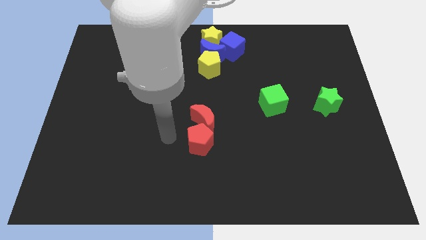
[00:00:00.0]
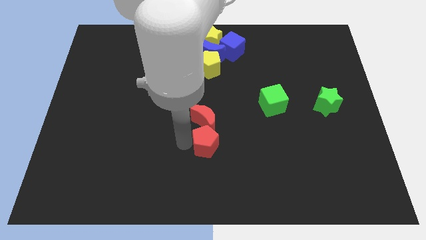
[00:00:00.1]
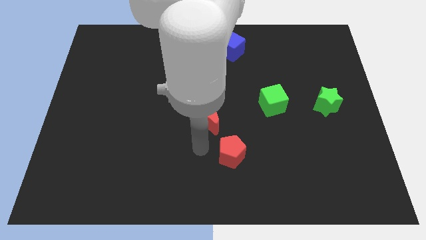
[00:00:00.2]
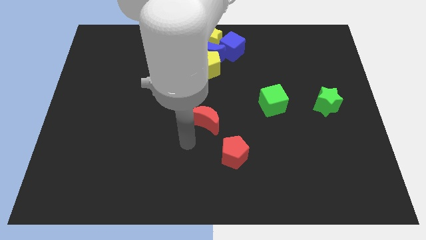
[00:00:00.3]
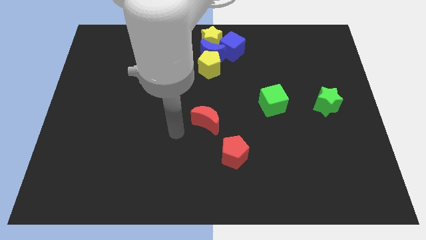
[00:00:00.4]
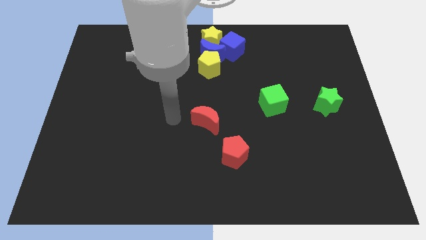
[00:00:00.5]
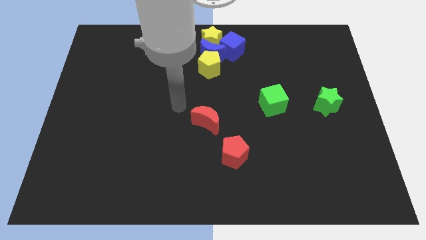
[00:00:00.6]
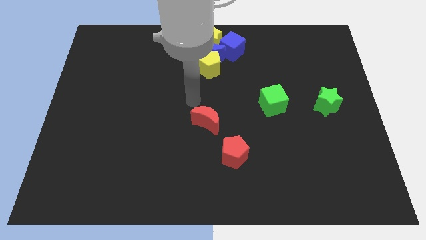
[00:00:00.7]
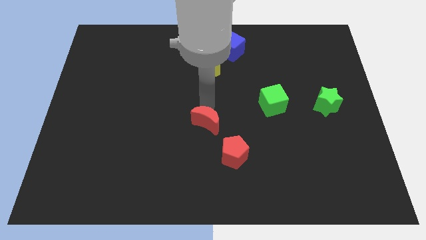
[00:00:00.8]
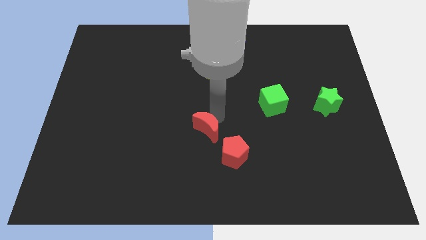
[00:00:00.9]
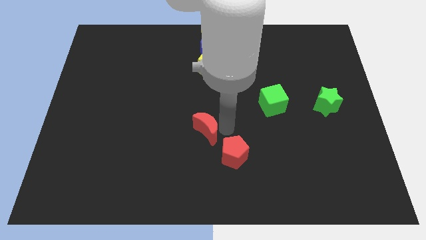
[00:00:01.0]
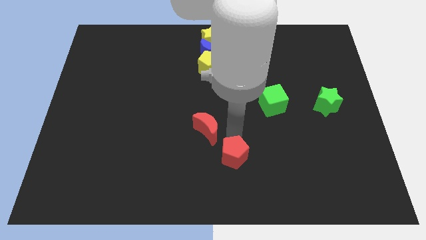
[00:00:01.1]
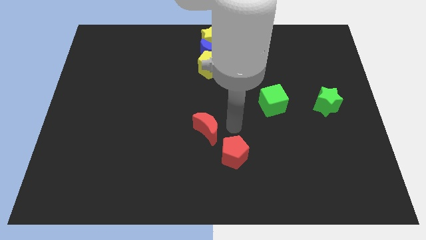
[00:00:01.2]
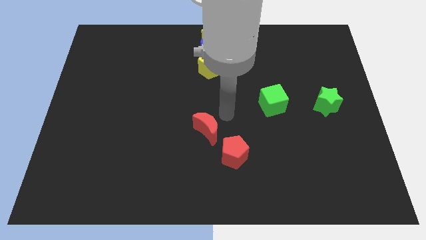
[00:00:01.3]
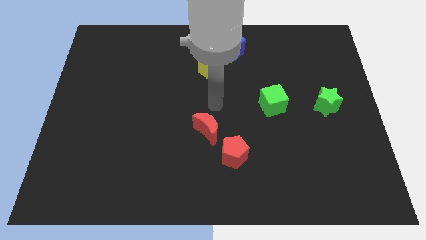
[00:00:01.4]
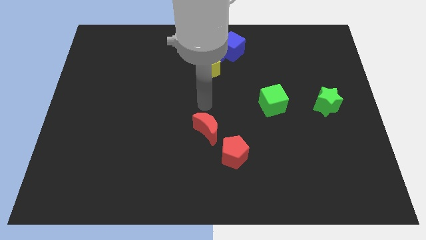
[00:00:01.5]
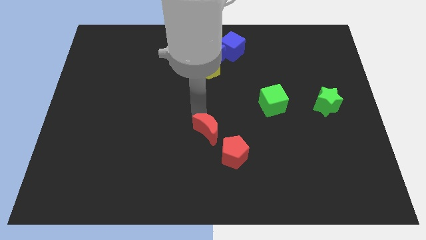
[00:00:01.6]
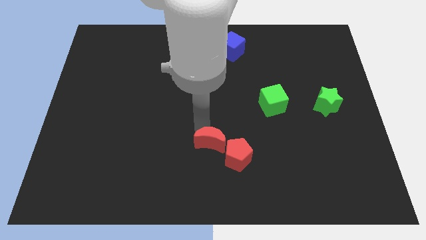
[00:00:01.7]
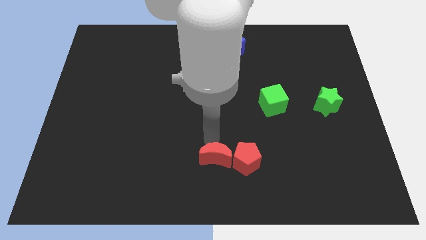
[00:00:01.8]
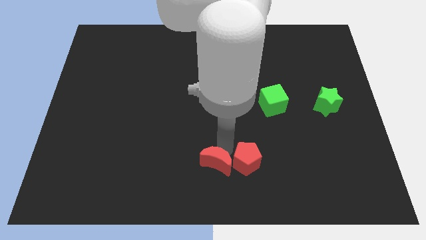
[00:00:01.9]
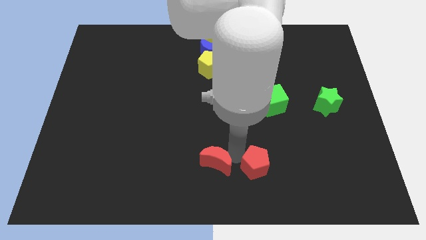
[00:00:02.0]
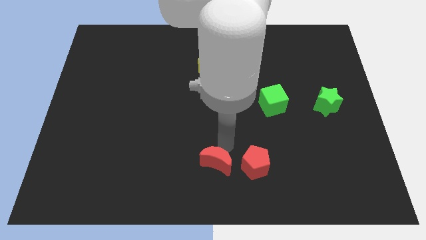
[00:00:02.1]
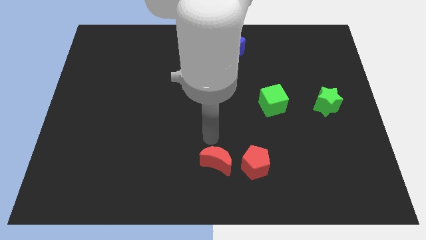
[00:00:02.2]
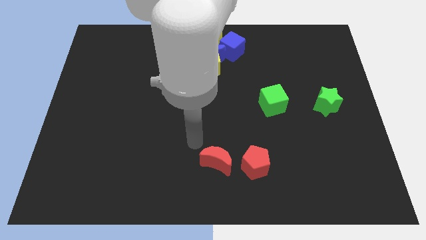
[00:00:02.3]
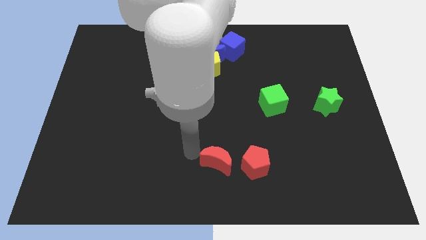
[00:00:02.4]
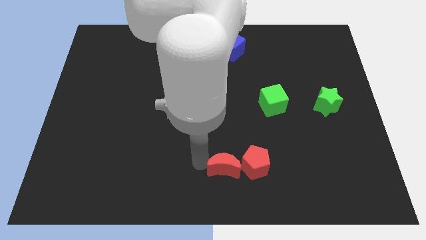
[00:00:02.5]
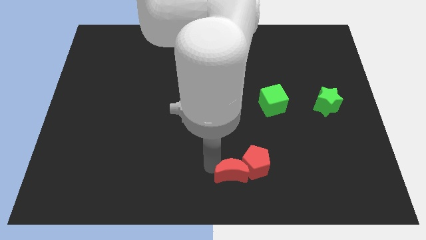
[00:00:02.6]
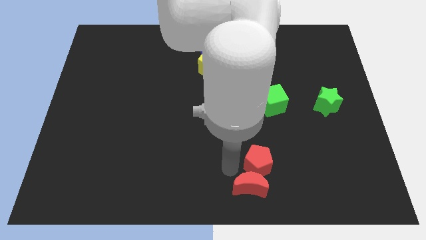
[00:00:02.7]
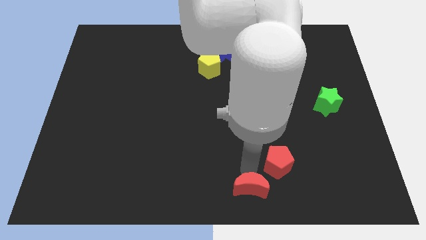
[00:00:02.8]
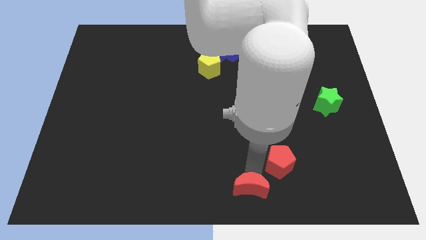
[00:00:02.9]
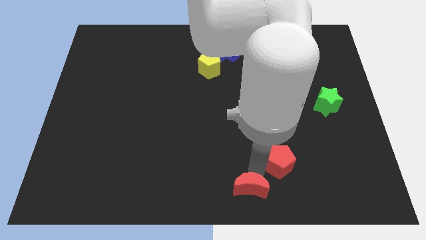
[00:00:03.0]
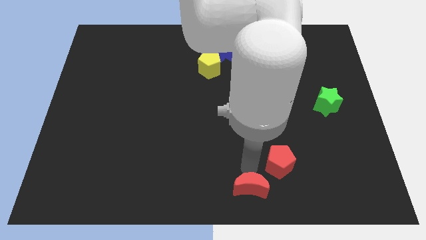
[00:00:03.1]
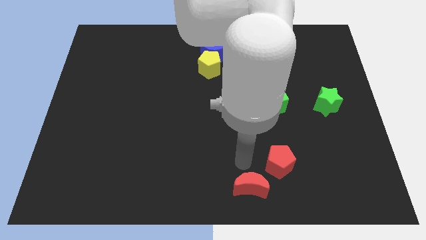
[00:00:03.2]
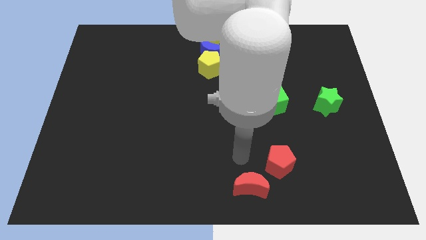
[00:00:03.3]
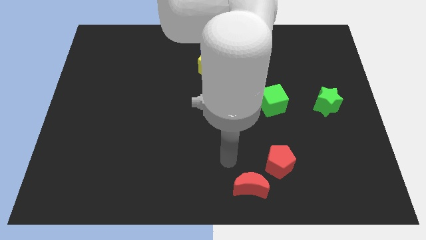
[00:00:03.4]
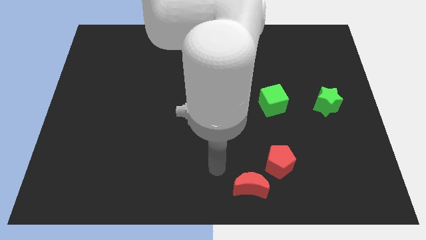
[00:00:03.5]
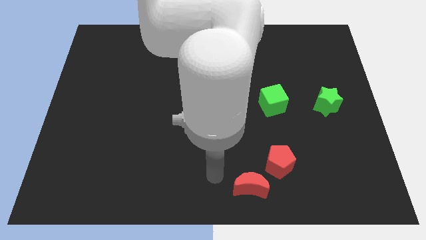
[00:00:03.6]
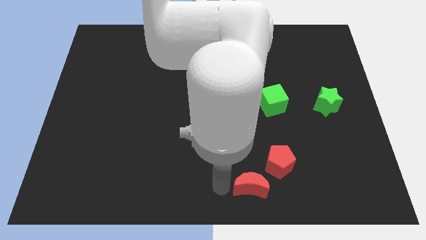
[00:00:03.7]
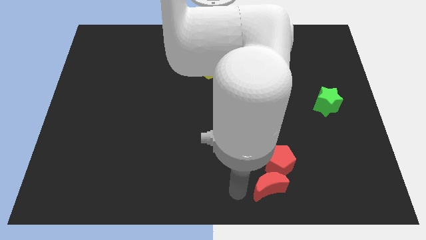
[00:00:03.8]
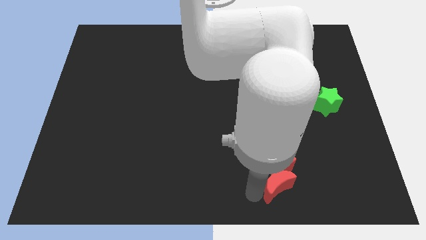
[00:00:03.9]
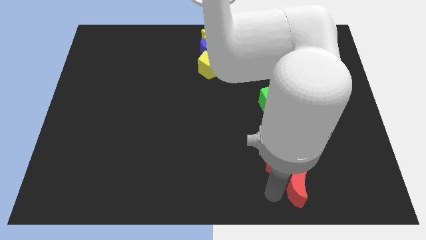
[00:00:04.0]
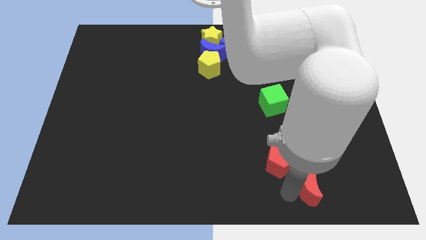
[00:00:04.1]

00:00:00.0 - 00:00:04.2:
move the red blocks under the green cube

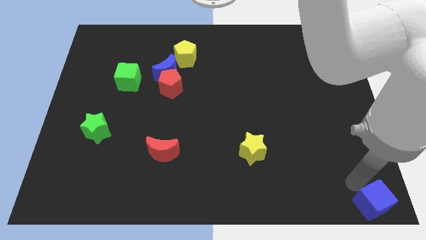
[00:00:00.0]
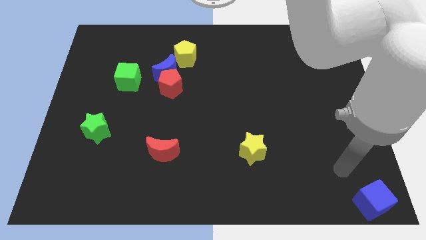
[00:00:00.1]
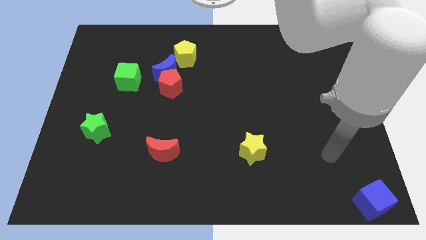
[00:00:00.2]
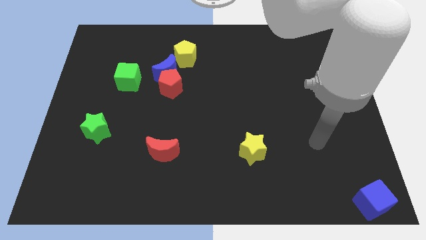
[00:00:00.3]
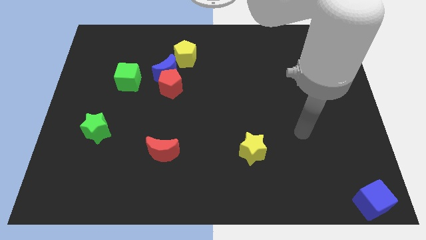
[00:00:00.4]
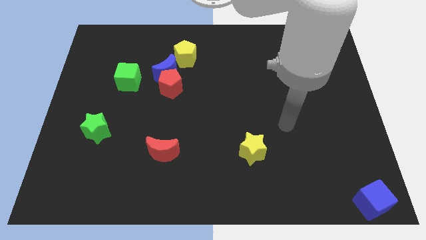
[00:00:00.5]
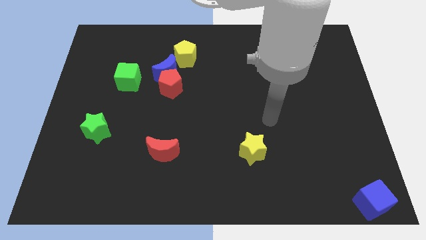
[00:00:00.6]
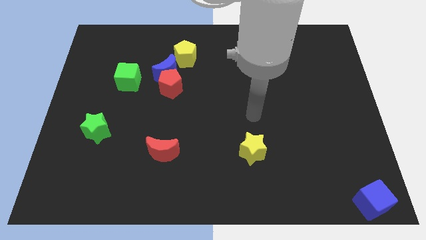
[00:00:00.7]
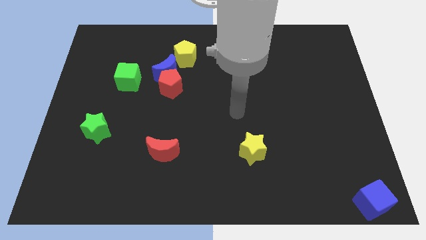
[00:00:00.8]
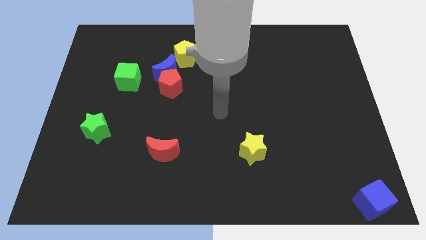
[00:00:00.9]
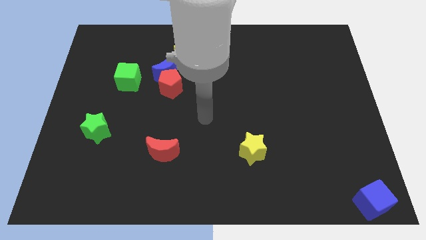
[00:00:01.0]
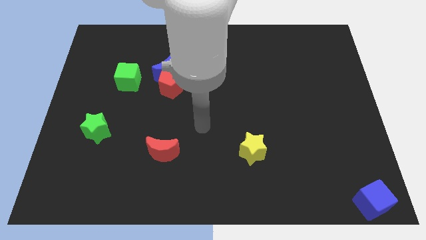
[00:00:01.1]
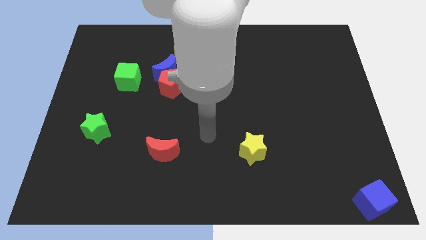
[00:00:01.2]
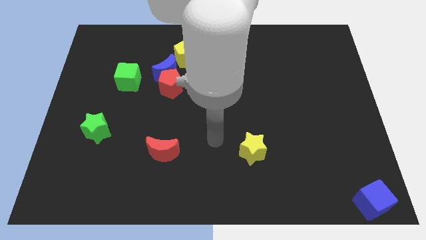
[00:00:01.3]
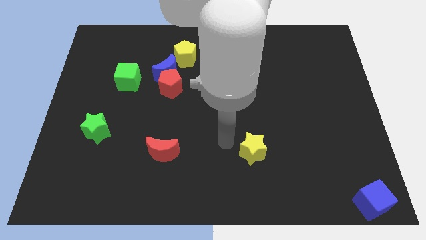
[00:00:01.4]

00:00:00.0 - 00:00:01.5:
place your hand towards the top left of the yellow star

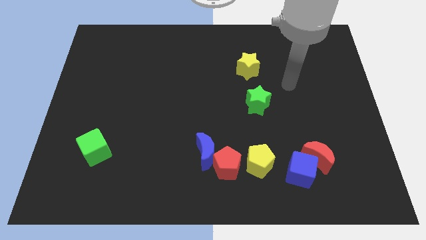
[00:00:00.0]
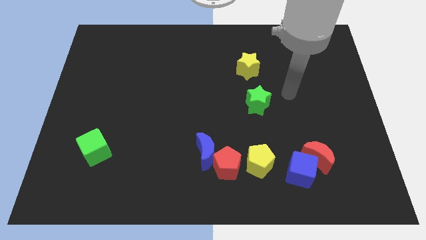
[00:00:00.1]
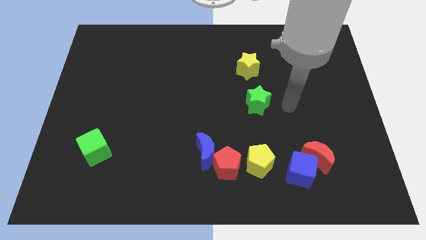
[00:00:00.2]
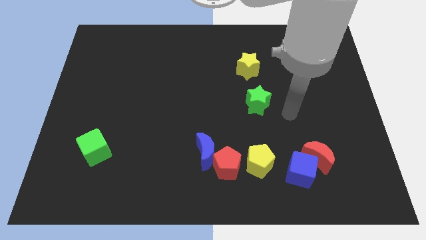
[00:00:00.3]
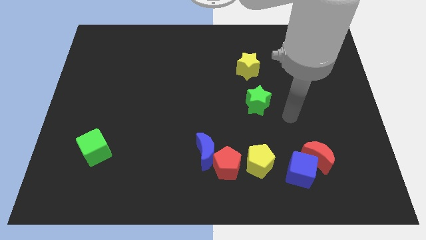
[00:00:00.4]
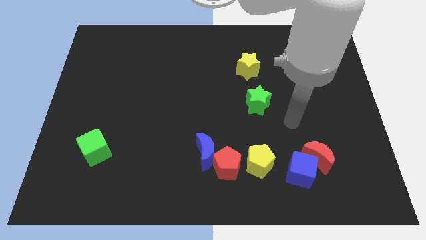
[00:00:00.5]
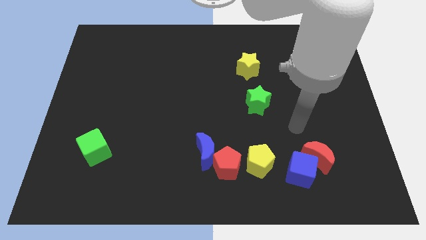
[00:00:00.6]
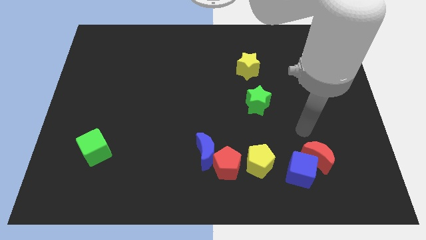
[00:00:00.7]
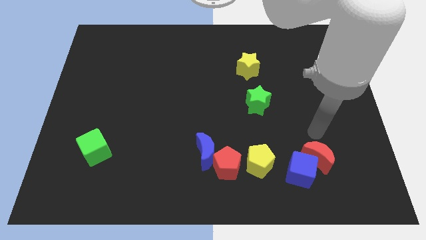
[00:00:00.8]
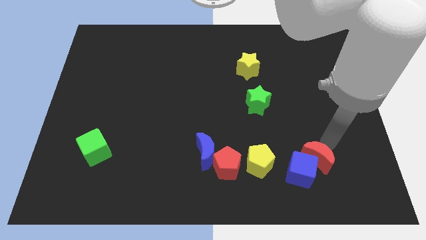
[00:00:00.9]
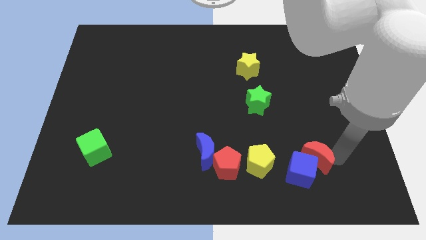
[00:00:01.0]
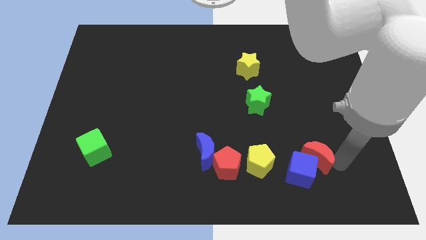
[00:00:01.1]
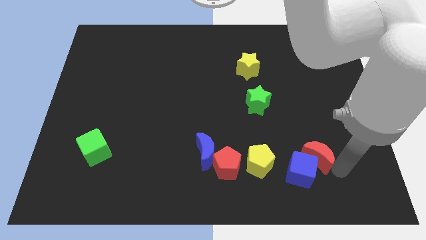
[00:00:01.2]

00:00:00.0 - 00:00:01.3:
point your arm at the right of the red crescent

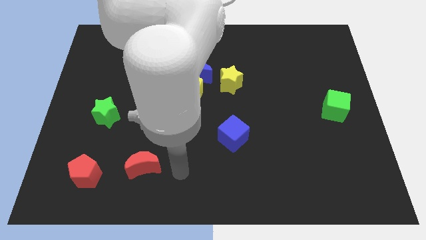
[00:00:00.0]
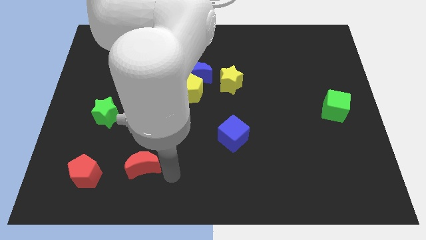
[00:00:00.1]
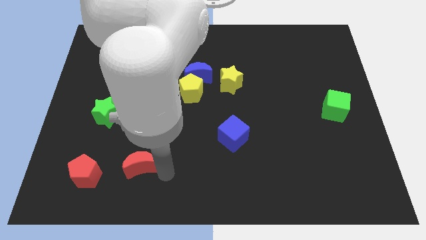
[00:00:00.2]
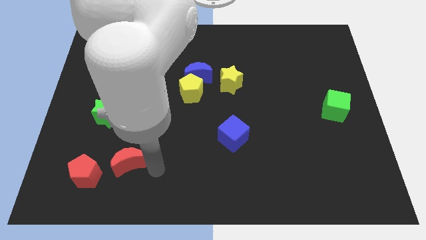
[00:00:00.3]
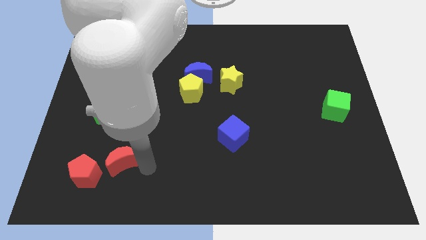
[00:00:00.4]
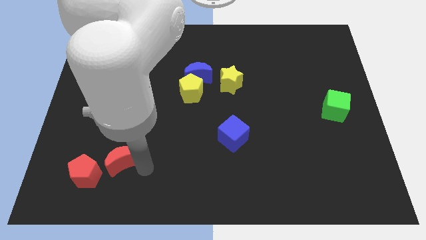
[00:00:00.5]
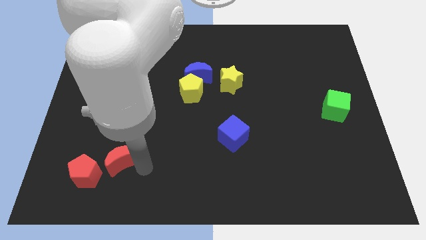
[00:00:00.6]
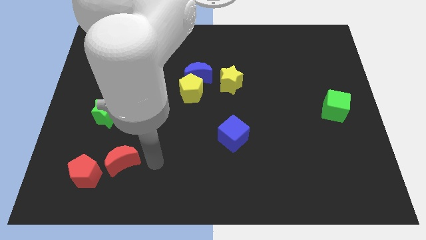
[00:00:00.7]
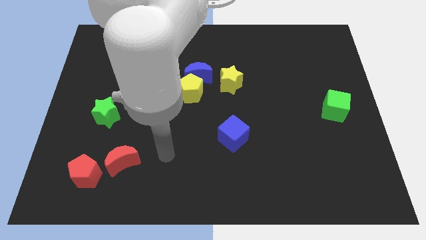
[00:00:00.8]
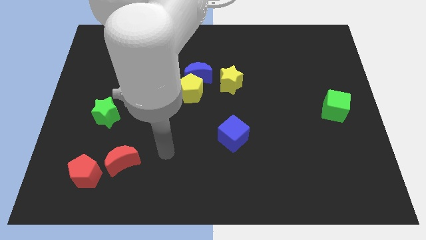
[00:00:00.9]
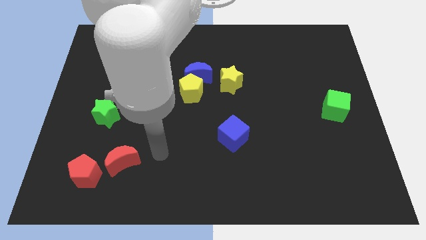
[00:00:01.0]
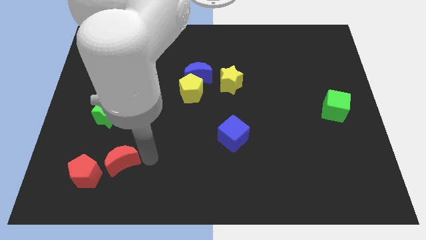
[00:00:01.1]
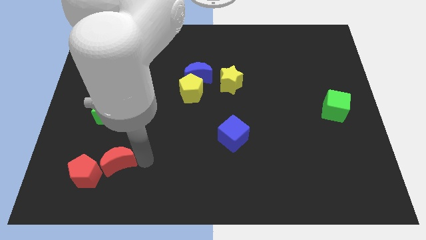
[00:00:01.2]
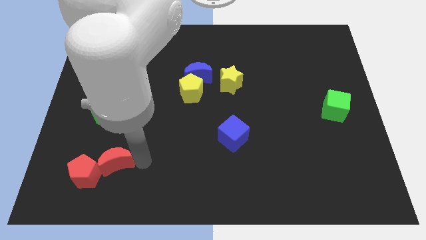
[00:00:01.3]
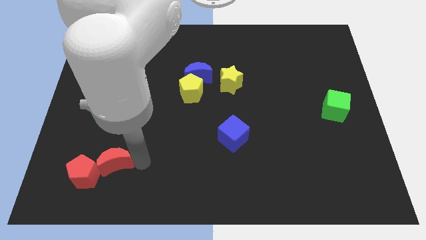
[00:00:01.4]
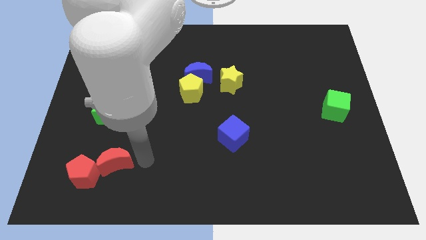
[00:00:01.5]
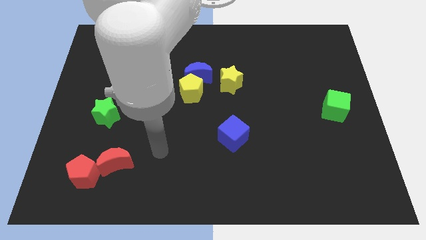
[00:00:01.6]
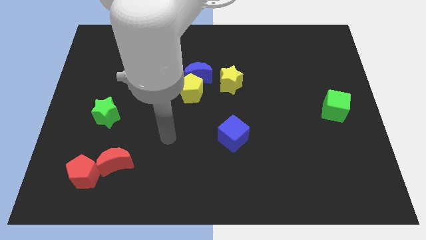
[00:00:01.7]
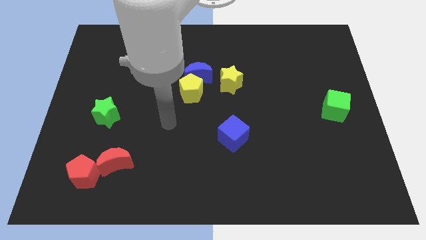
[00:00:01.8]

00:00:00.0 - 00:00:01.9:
push the red crescent into red pentagon to the right
